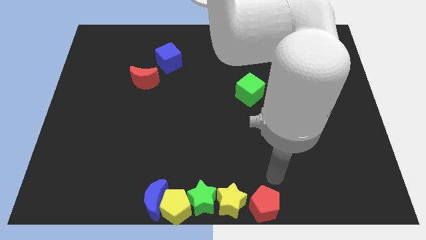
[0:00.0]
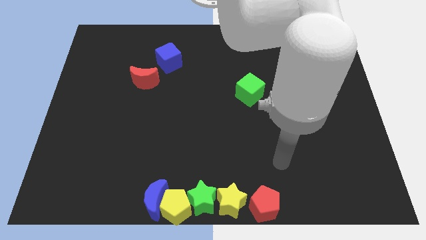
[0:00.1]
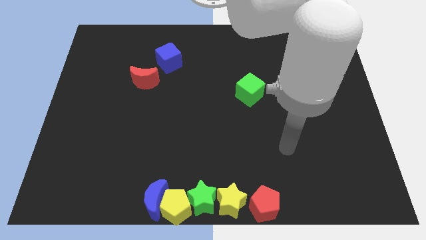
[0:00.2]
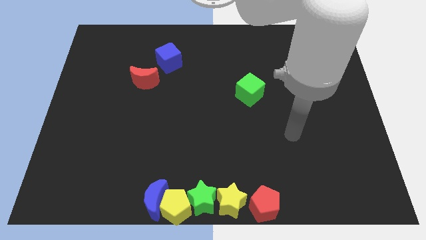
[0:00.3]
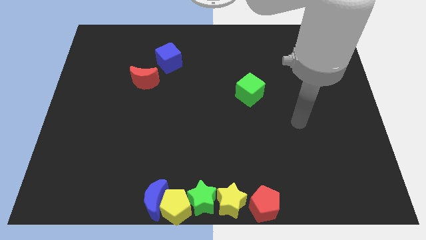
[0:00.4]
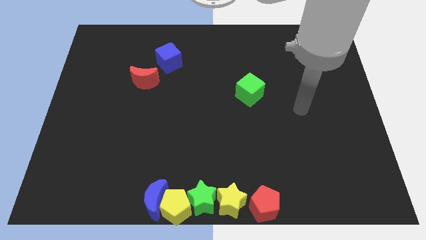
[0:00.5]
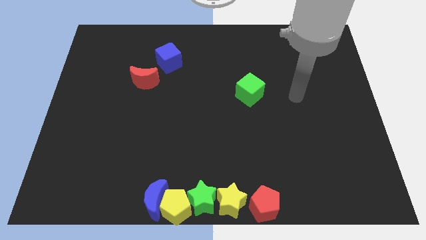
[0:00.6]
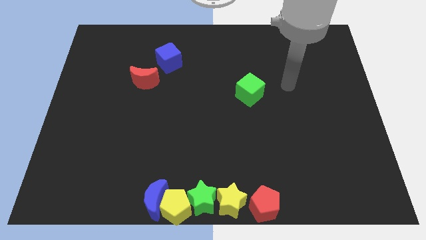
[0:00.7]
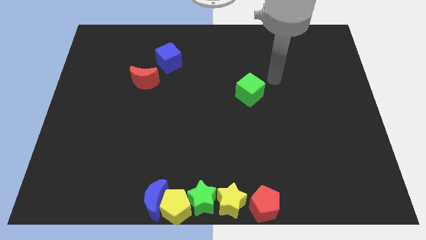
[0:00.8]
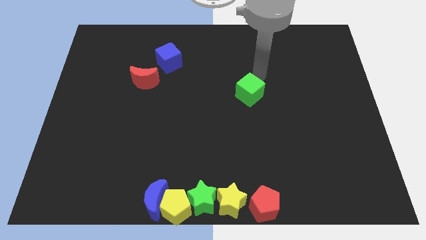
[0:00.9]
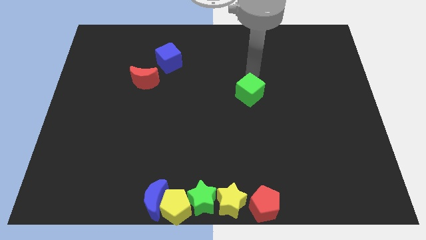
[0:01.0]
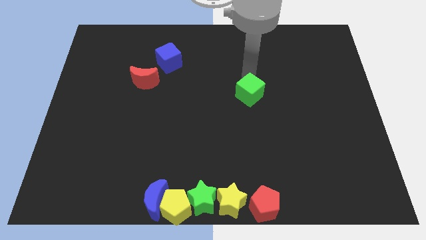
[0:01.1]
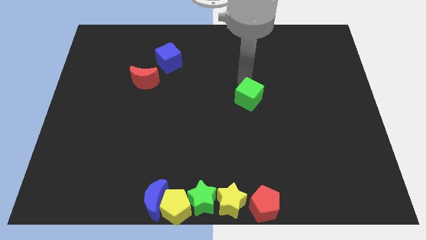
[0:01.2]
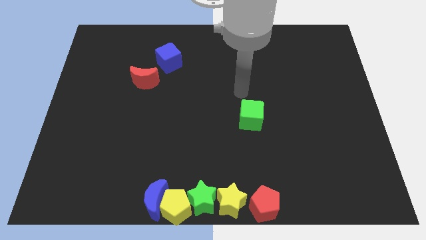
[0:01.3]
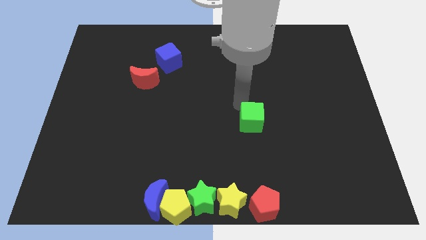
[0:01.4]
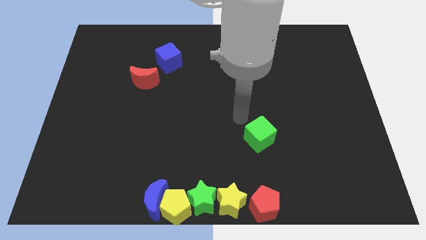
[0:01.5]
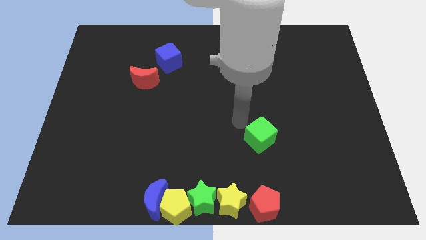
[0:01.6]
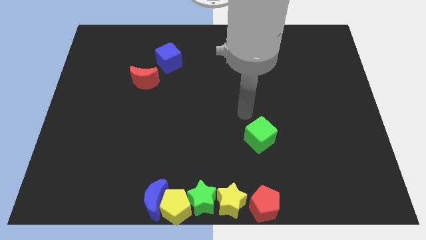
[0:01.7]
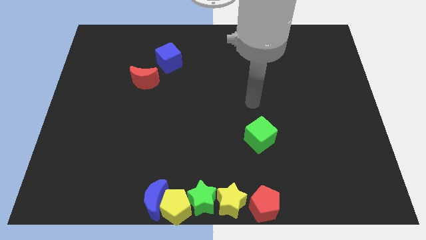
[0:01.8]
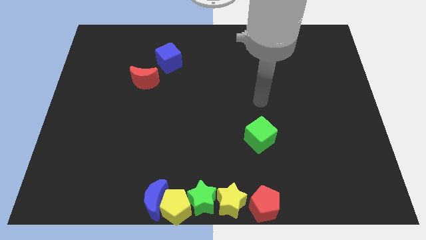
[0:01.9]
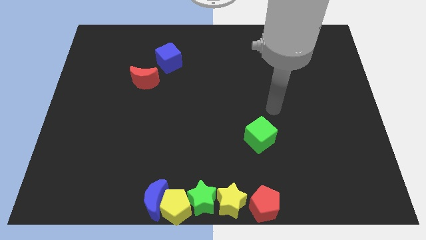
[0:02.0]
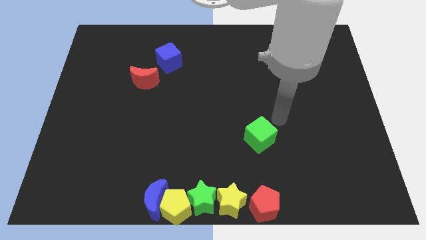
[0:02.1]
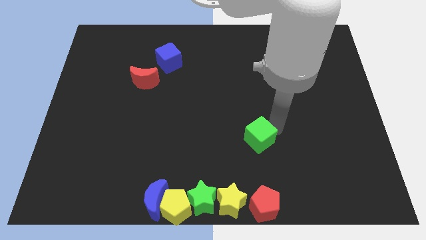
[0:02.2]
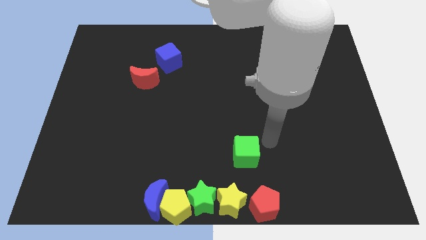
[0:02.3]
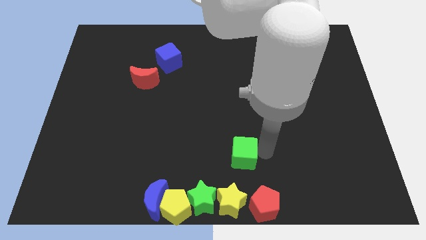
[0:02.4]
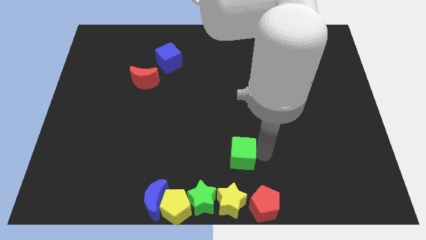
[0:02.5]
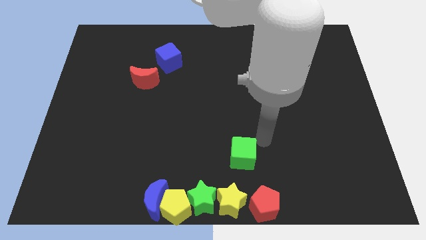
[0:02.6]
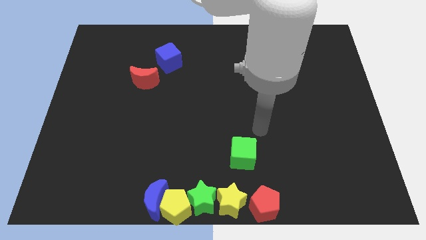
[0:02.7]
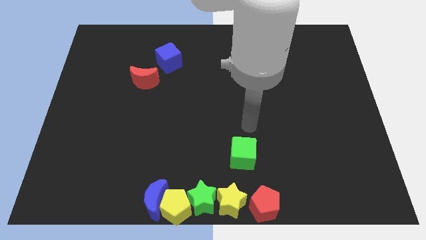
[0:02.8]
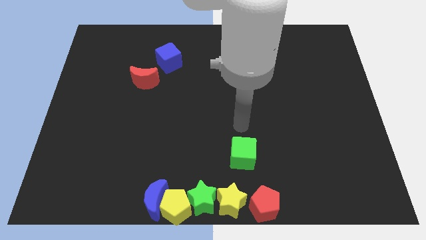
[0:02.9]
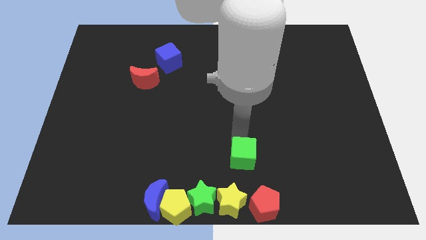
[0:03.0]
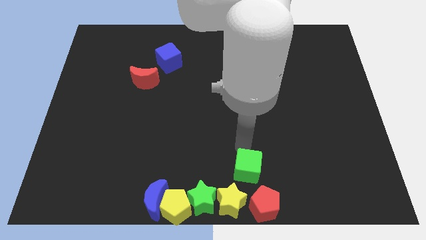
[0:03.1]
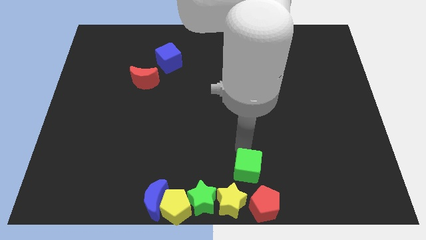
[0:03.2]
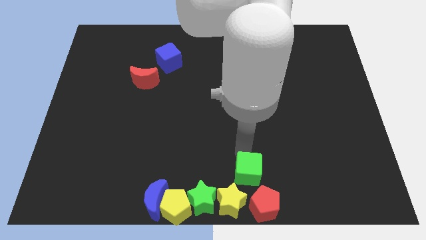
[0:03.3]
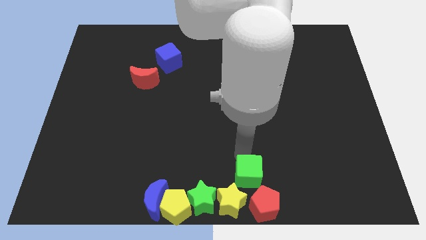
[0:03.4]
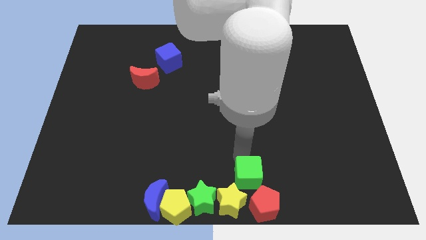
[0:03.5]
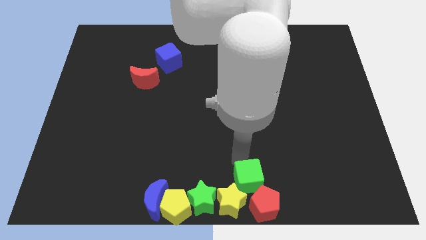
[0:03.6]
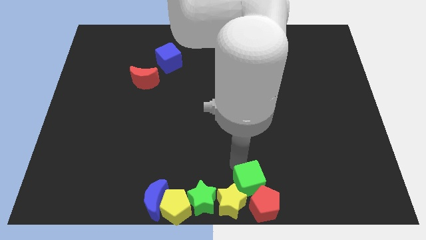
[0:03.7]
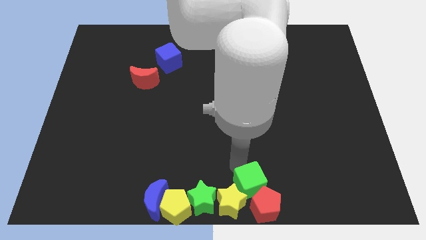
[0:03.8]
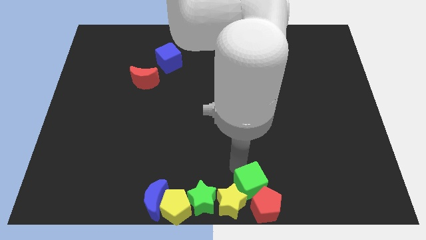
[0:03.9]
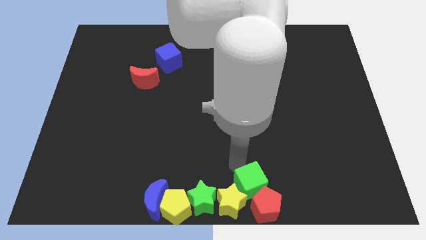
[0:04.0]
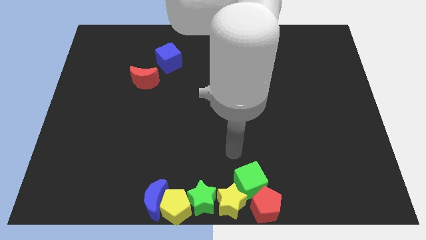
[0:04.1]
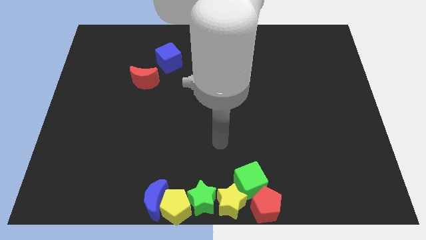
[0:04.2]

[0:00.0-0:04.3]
push the green cube into the yellow star

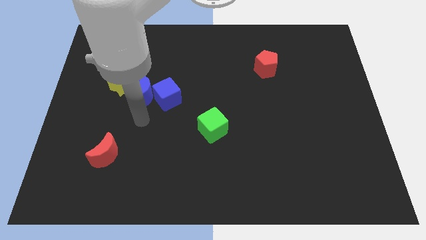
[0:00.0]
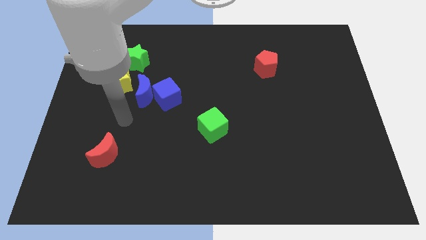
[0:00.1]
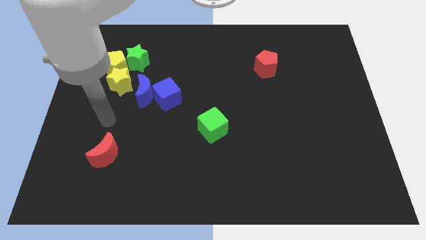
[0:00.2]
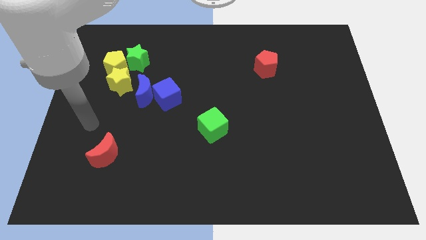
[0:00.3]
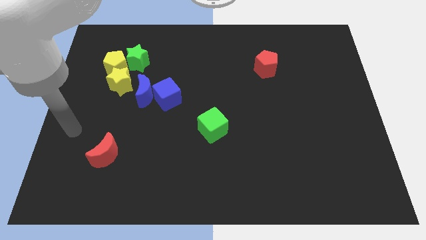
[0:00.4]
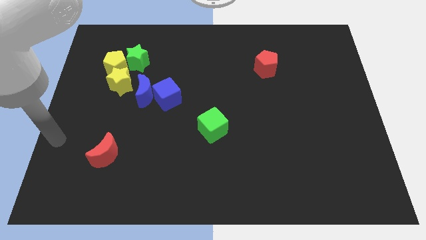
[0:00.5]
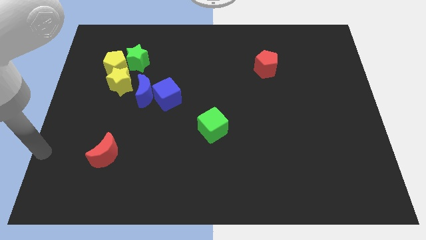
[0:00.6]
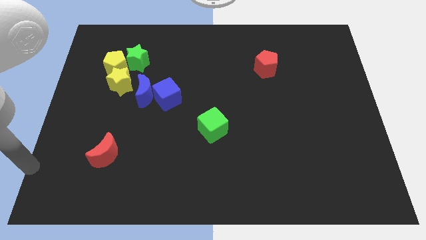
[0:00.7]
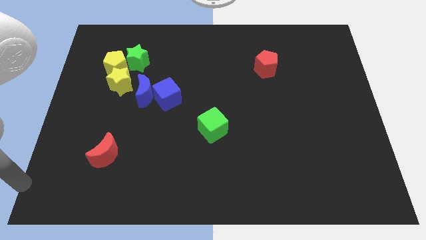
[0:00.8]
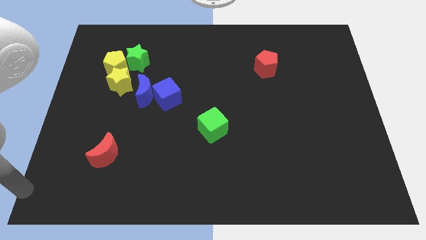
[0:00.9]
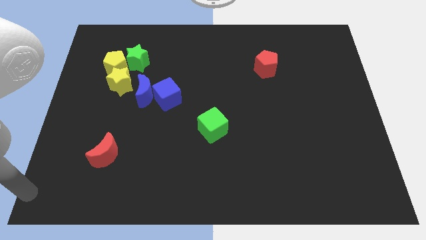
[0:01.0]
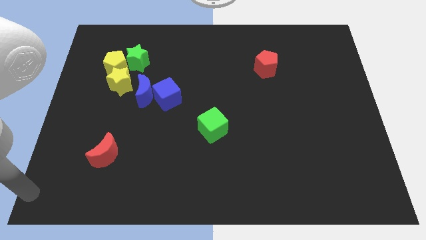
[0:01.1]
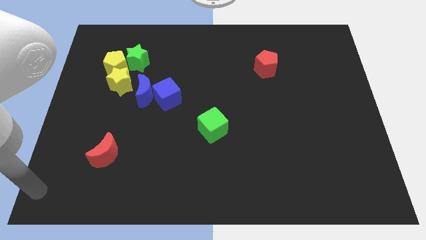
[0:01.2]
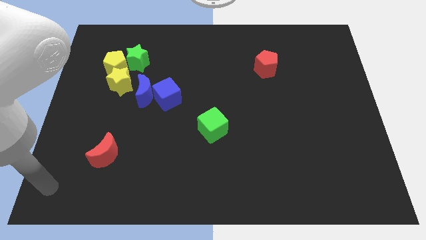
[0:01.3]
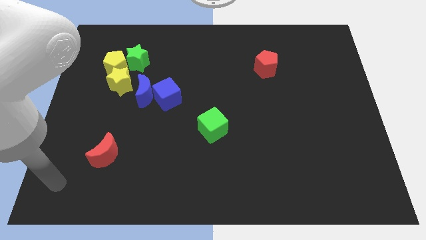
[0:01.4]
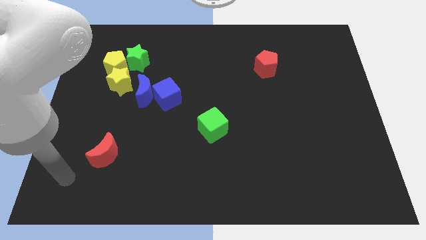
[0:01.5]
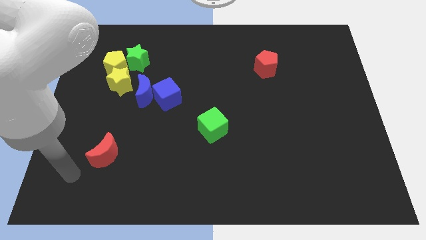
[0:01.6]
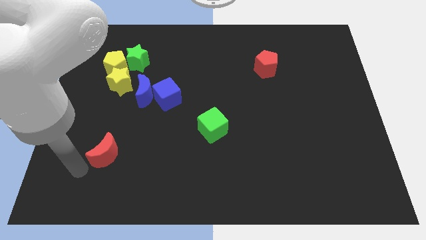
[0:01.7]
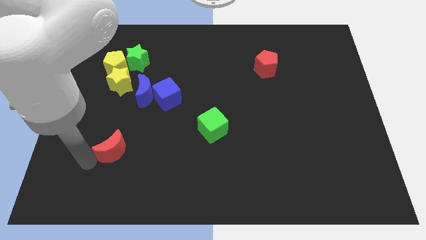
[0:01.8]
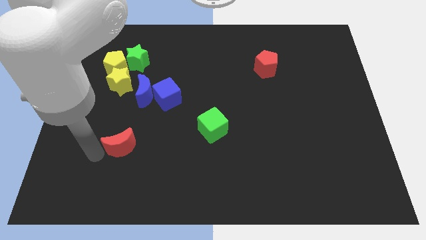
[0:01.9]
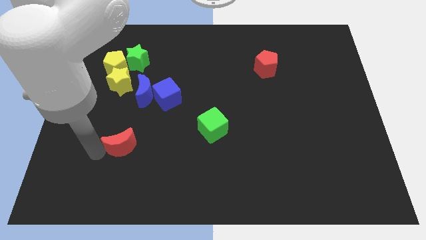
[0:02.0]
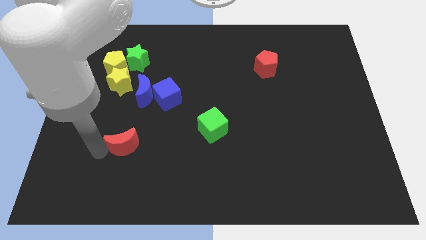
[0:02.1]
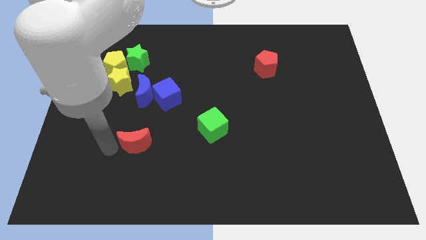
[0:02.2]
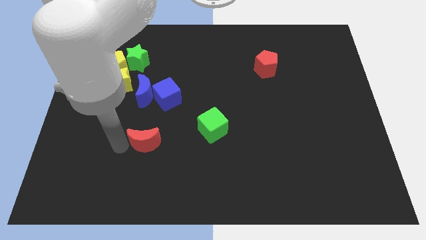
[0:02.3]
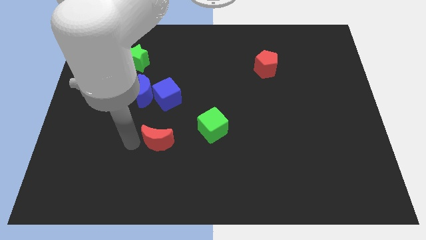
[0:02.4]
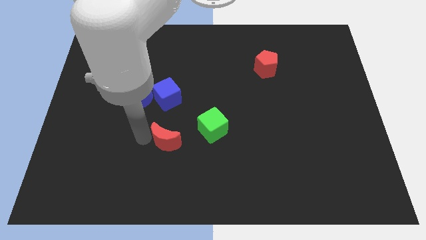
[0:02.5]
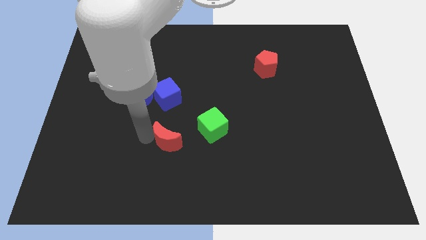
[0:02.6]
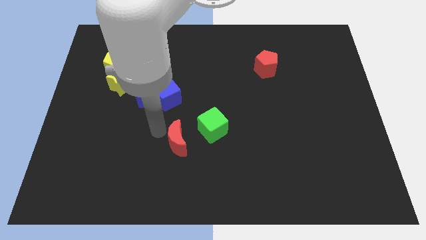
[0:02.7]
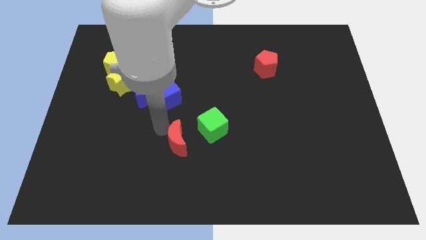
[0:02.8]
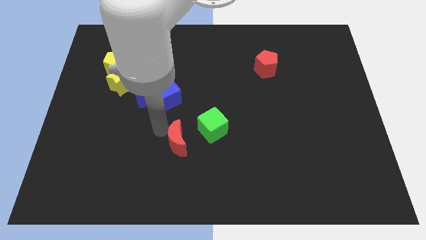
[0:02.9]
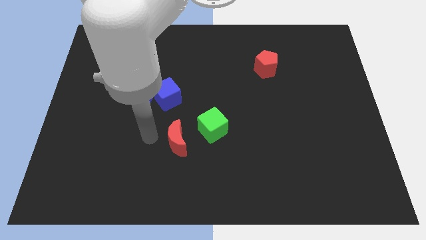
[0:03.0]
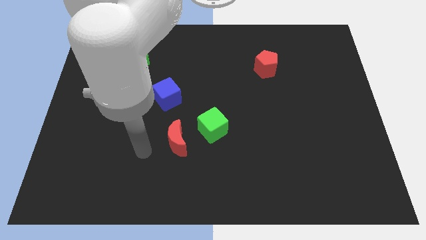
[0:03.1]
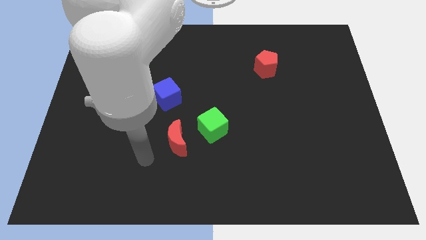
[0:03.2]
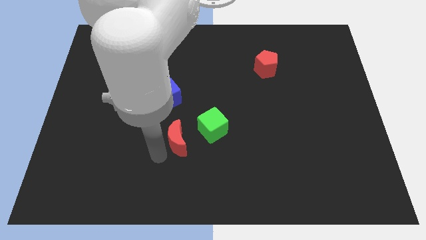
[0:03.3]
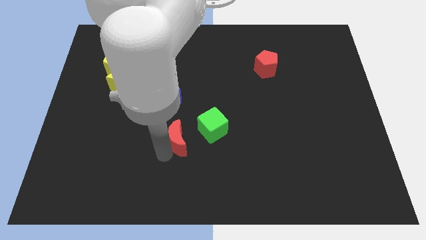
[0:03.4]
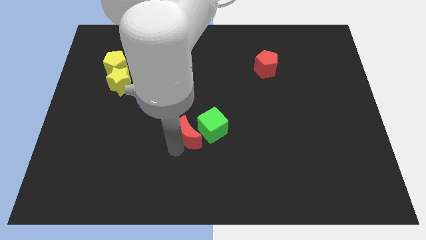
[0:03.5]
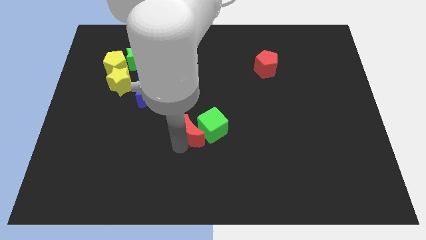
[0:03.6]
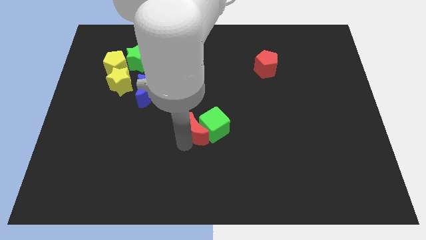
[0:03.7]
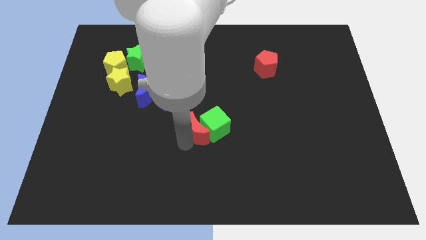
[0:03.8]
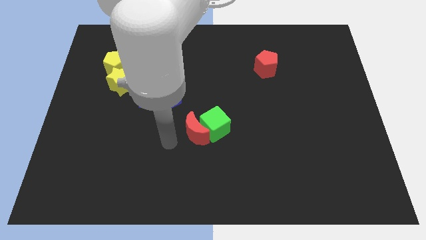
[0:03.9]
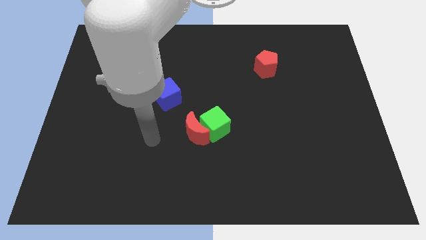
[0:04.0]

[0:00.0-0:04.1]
push the red moon into green cube

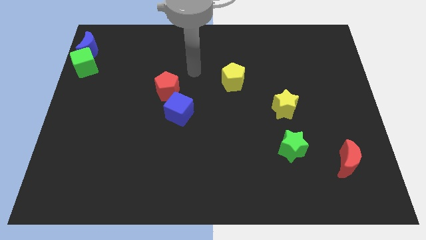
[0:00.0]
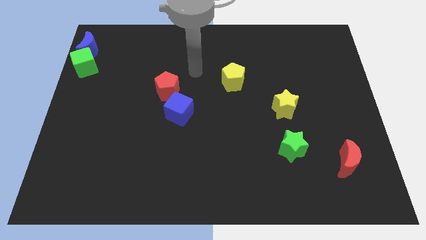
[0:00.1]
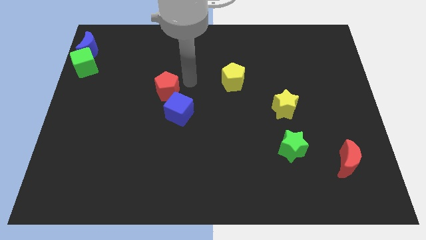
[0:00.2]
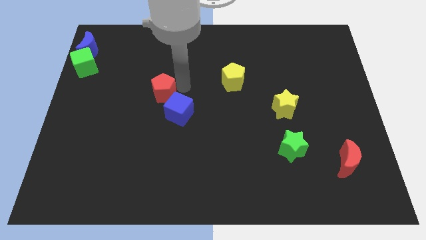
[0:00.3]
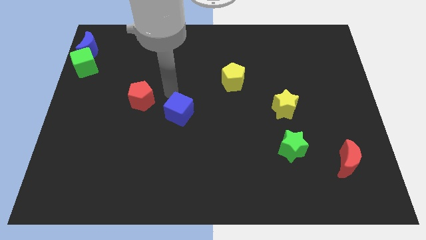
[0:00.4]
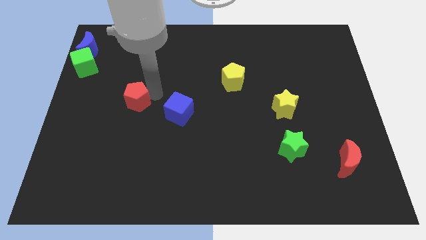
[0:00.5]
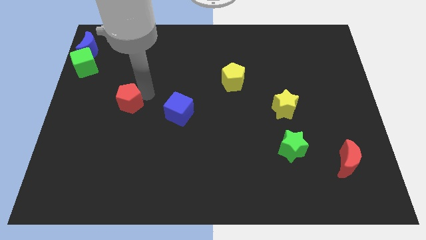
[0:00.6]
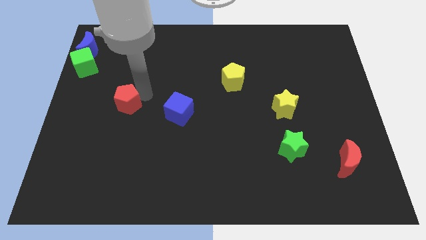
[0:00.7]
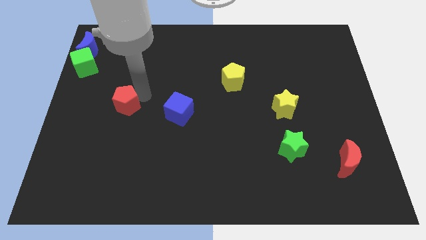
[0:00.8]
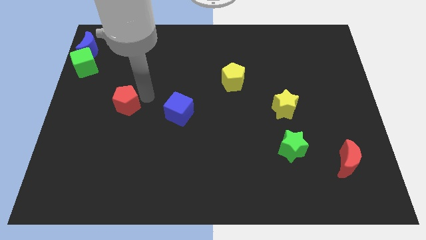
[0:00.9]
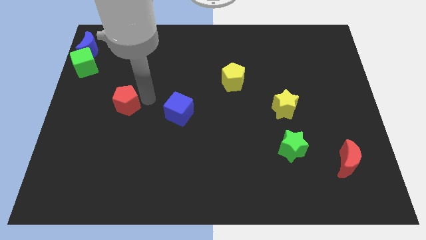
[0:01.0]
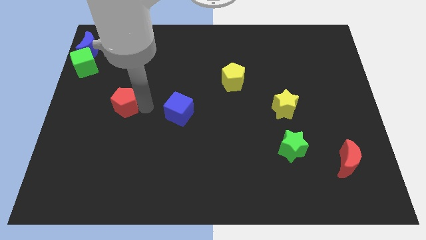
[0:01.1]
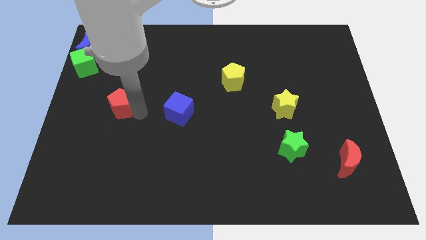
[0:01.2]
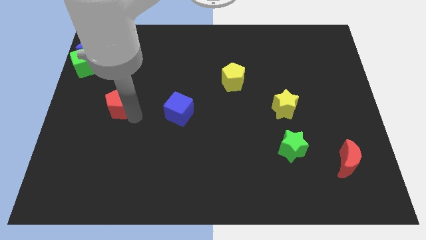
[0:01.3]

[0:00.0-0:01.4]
move red pentagon away from the blue cube
